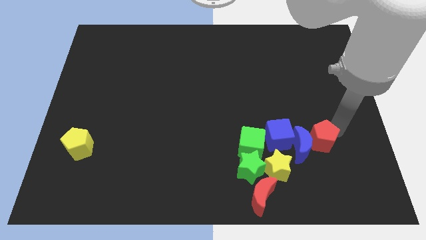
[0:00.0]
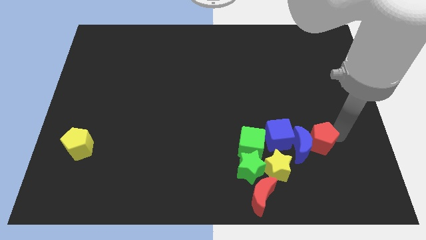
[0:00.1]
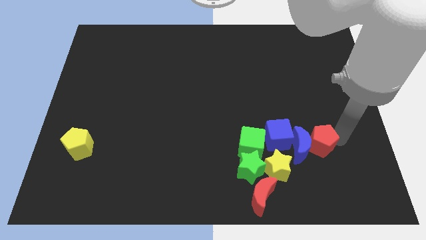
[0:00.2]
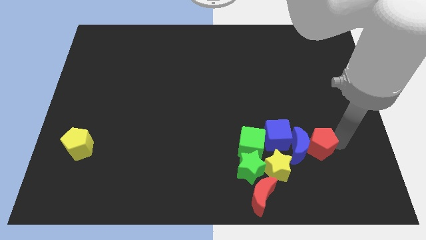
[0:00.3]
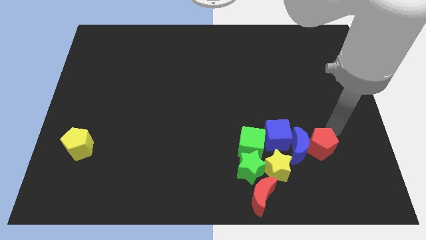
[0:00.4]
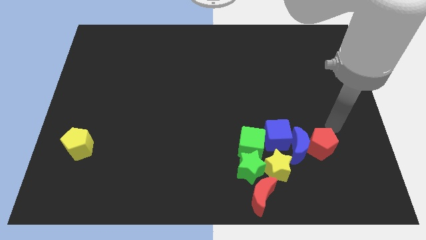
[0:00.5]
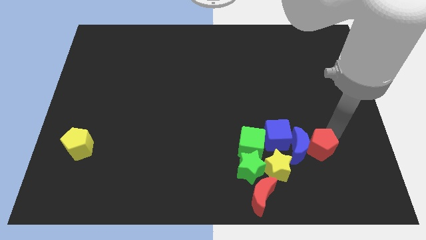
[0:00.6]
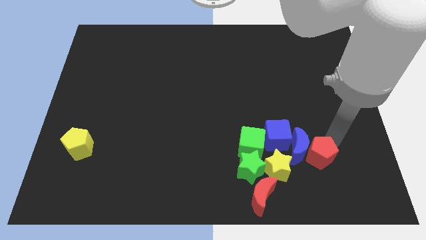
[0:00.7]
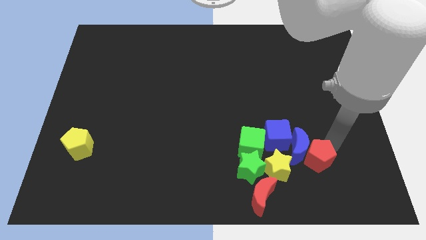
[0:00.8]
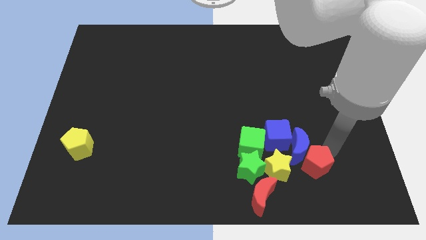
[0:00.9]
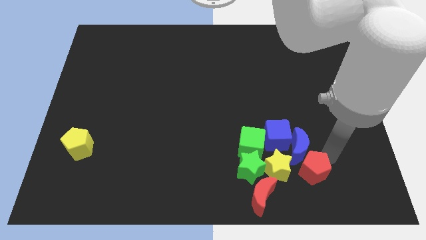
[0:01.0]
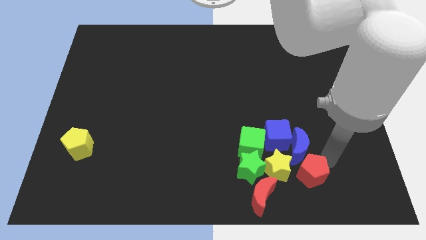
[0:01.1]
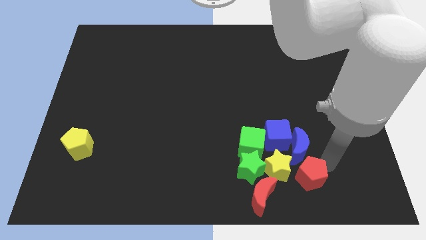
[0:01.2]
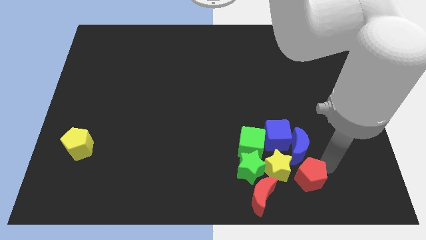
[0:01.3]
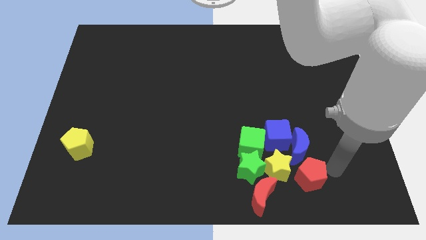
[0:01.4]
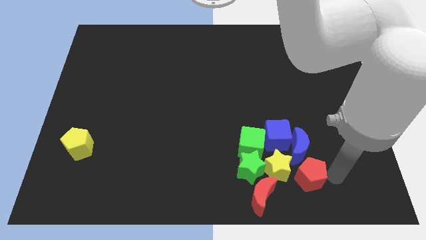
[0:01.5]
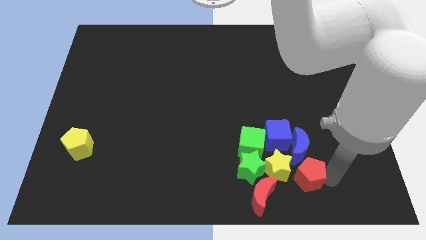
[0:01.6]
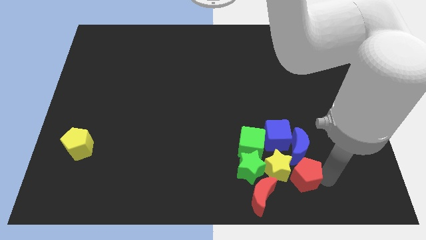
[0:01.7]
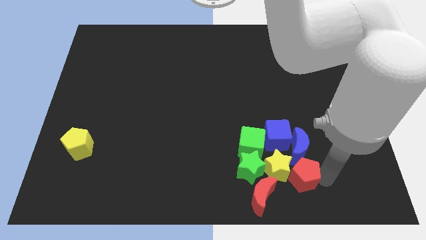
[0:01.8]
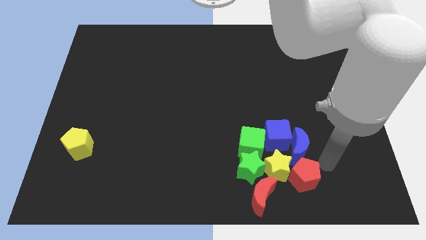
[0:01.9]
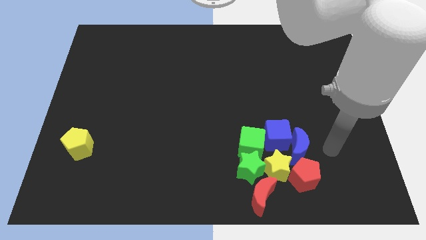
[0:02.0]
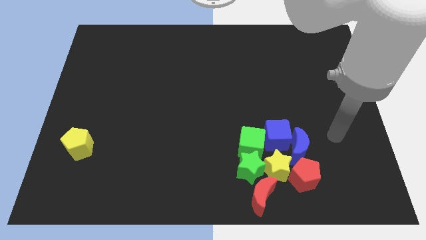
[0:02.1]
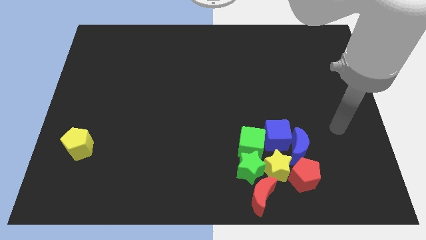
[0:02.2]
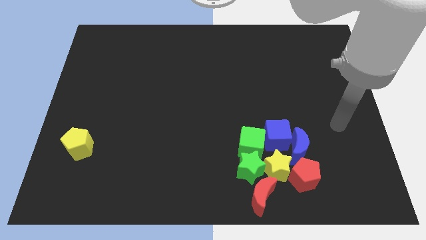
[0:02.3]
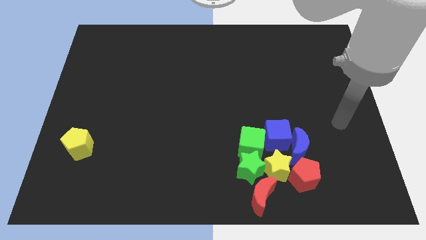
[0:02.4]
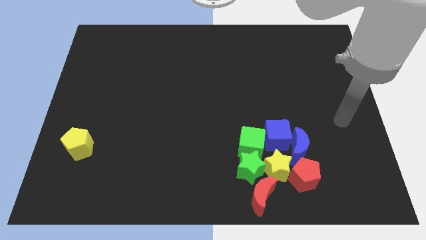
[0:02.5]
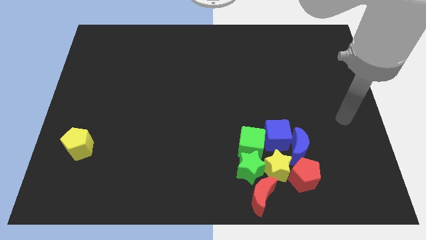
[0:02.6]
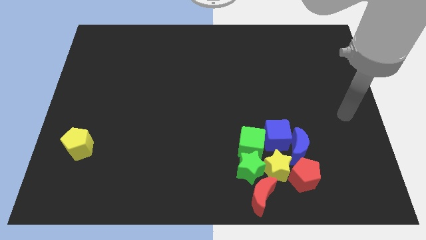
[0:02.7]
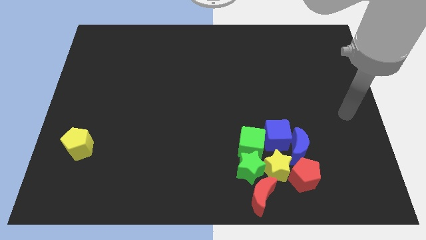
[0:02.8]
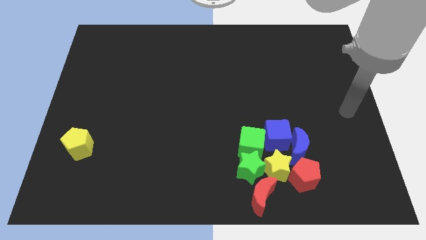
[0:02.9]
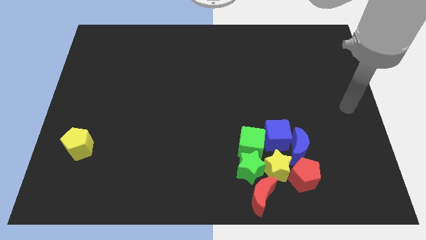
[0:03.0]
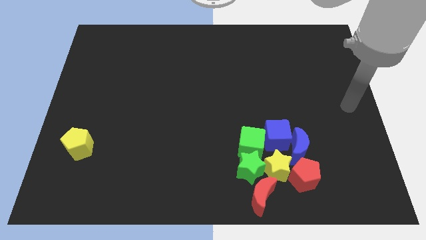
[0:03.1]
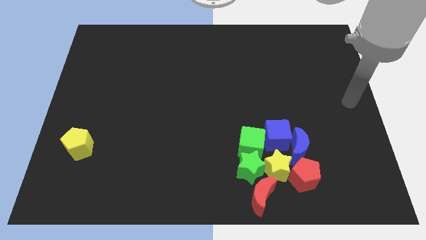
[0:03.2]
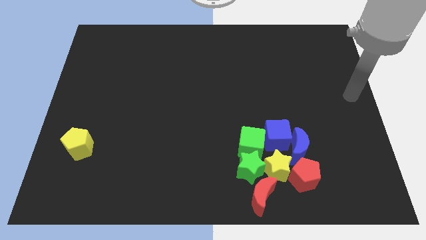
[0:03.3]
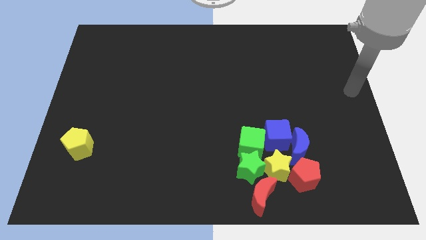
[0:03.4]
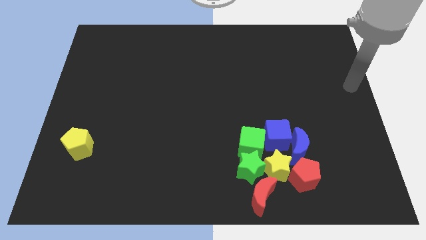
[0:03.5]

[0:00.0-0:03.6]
place red pentagon right to yellow star

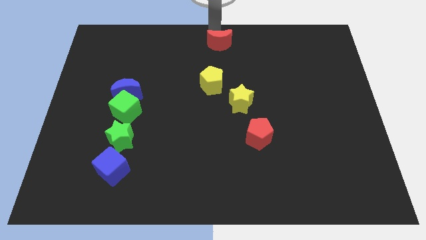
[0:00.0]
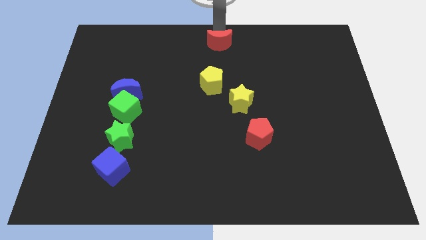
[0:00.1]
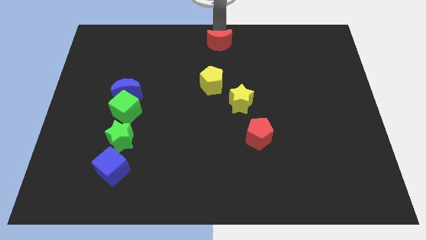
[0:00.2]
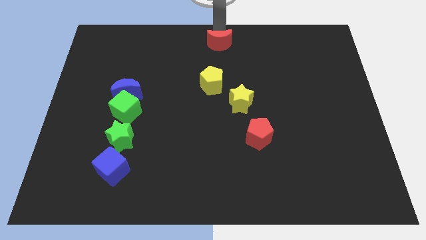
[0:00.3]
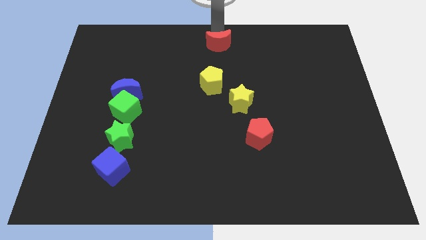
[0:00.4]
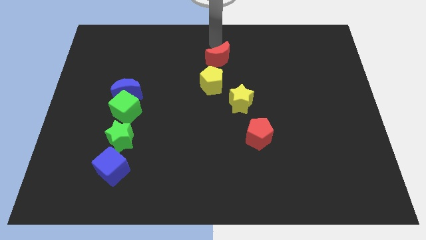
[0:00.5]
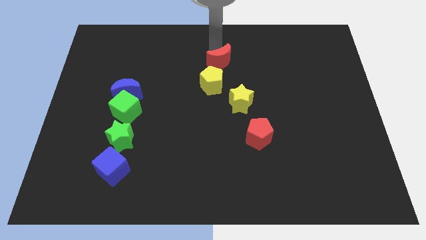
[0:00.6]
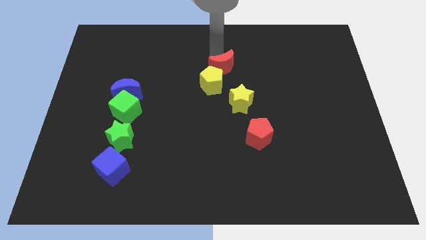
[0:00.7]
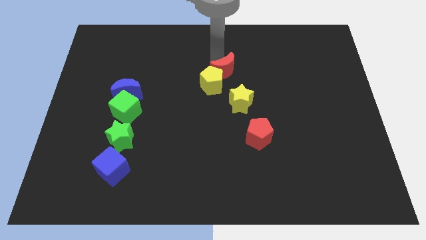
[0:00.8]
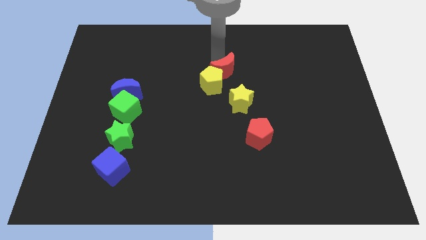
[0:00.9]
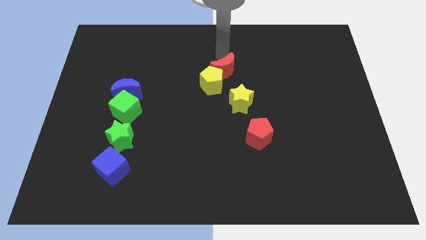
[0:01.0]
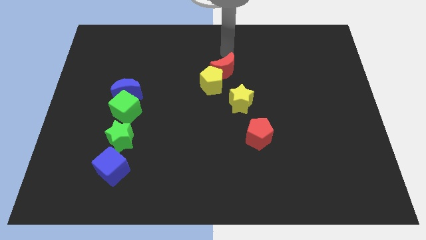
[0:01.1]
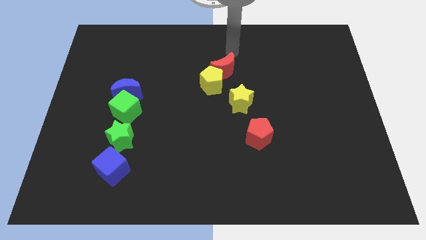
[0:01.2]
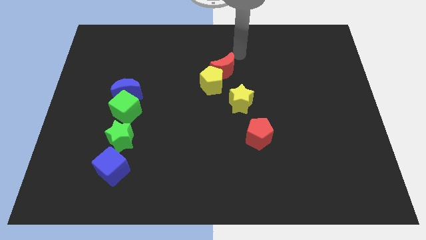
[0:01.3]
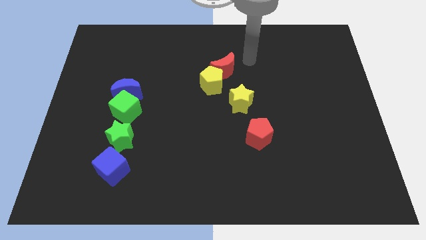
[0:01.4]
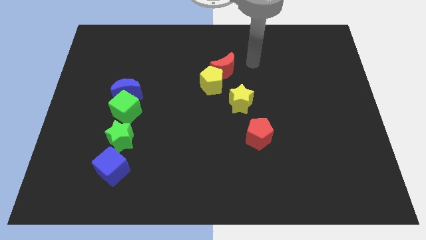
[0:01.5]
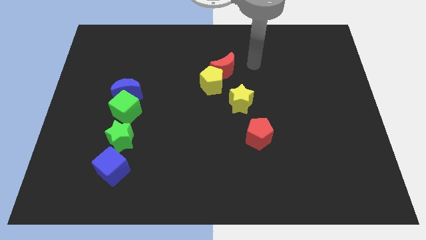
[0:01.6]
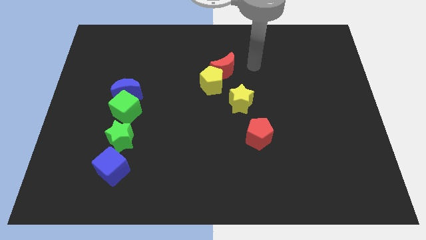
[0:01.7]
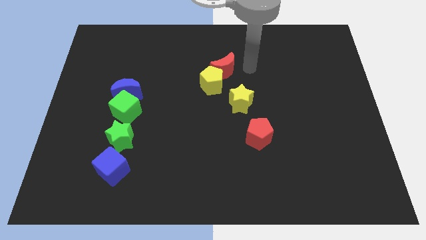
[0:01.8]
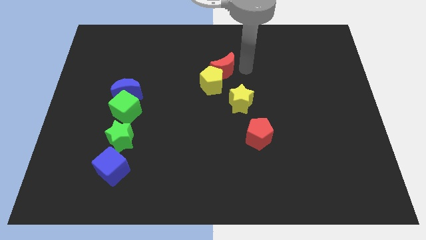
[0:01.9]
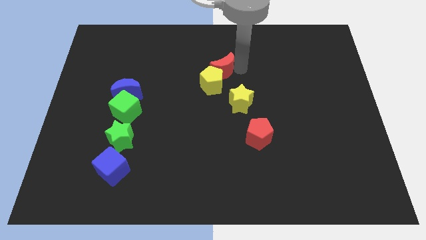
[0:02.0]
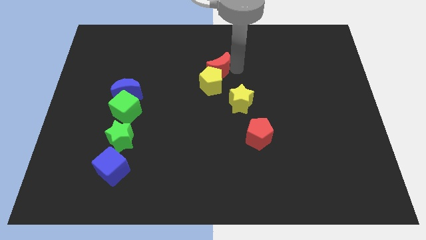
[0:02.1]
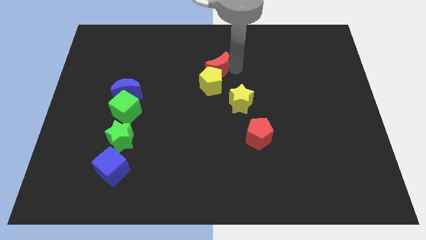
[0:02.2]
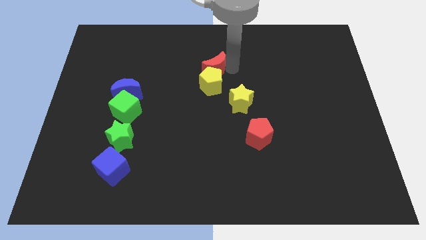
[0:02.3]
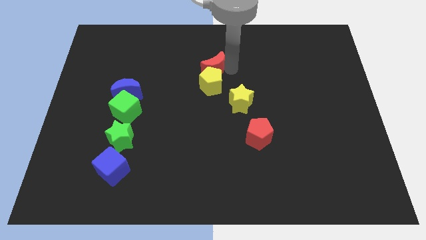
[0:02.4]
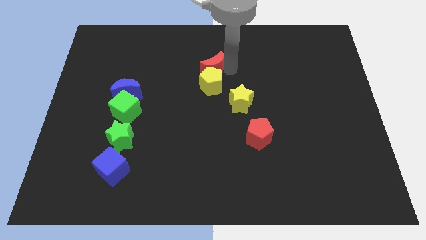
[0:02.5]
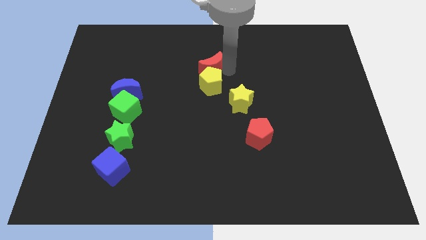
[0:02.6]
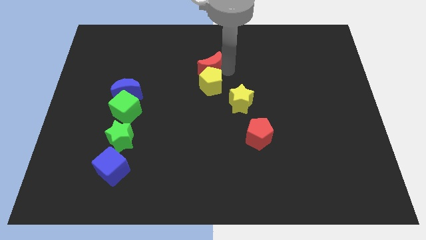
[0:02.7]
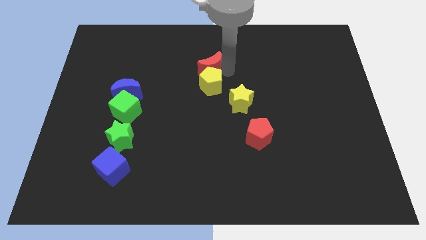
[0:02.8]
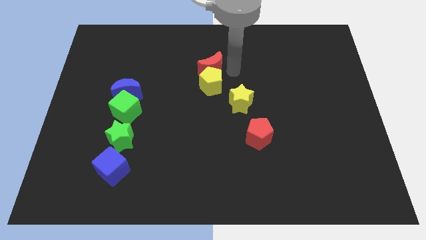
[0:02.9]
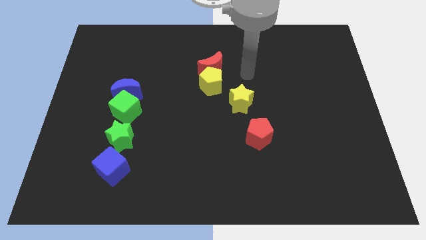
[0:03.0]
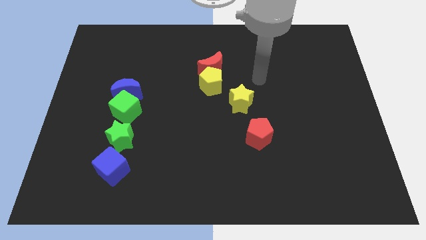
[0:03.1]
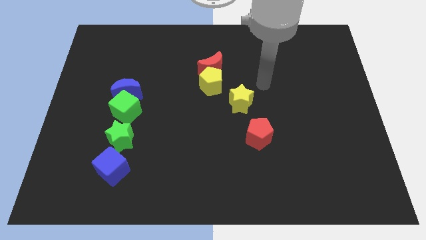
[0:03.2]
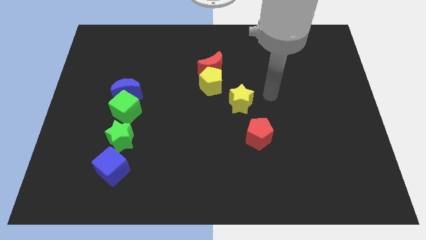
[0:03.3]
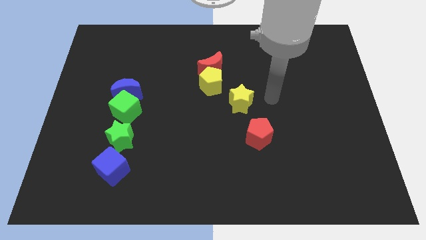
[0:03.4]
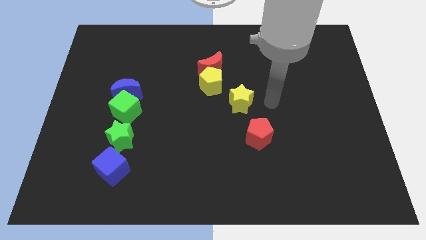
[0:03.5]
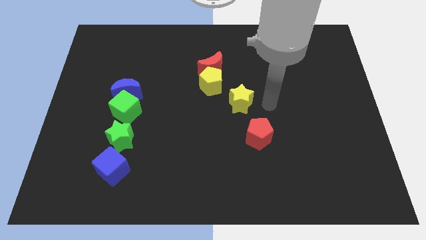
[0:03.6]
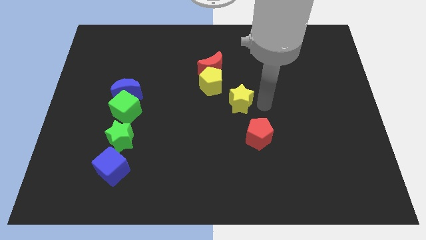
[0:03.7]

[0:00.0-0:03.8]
move the red crescent into the yellow pentagon

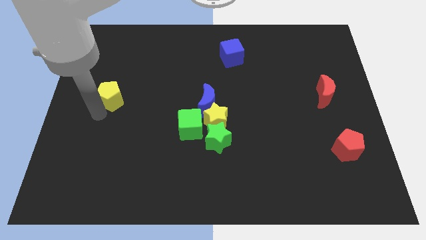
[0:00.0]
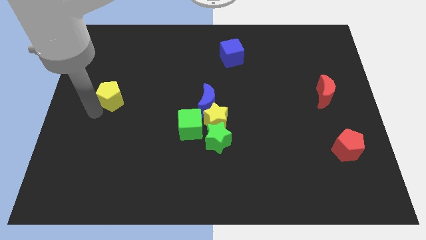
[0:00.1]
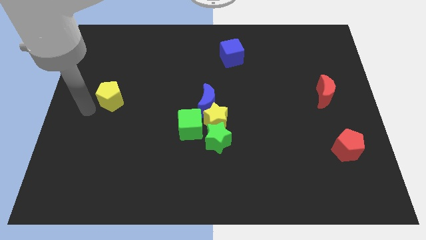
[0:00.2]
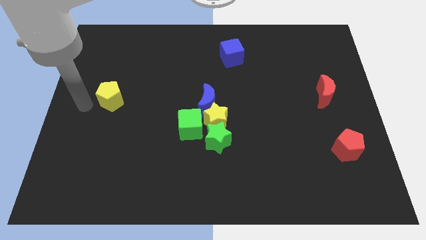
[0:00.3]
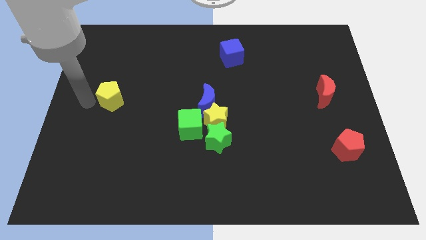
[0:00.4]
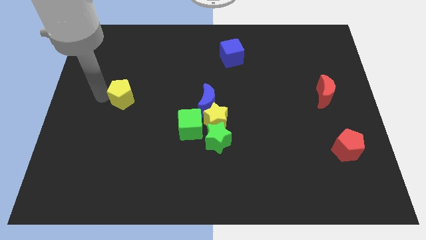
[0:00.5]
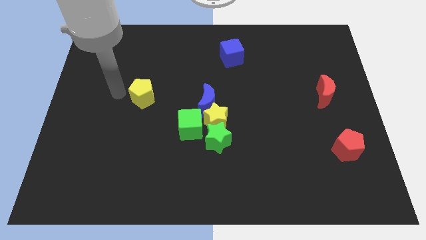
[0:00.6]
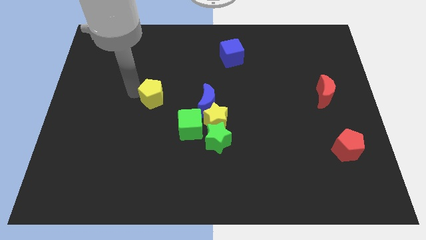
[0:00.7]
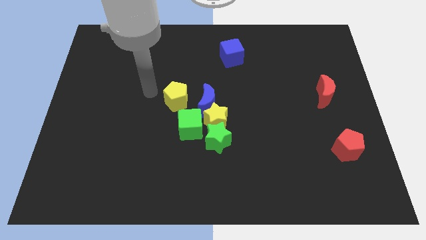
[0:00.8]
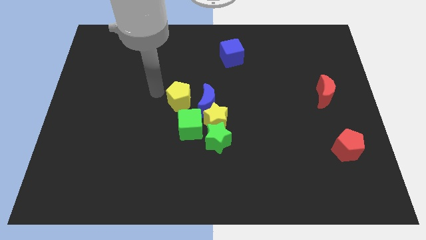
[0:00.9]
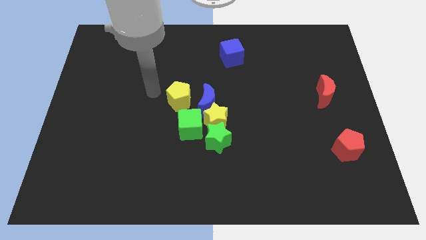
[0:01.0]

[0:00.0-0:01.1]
place the yellow pentagon to the left of the blue crescent

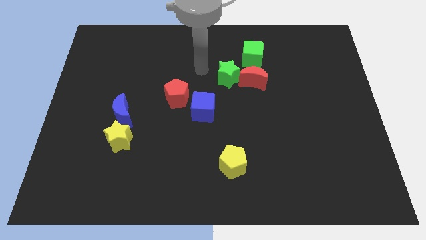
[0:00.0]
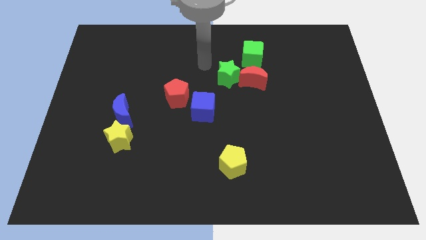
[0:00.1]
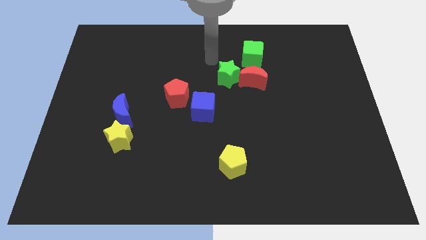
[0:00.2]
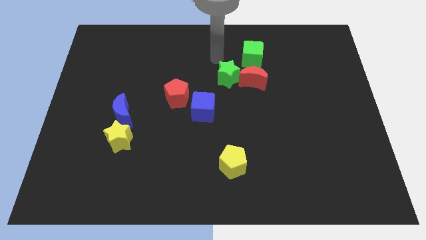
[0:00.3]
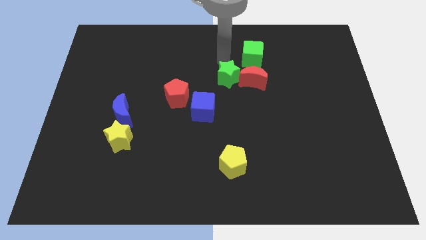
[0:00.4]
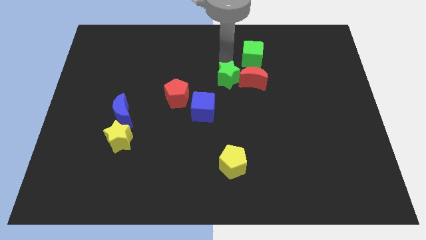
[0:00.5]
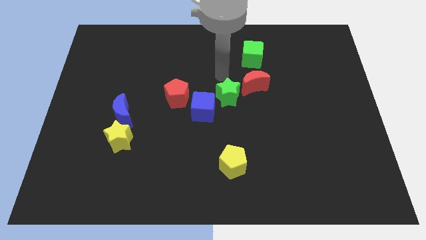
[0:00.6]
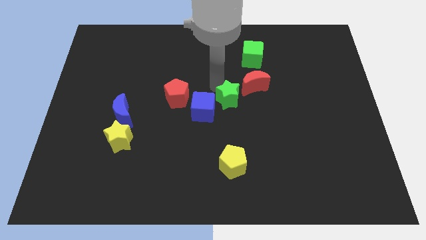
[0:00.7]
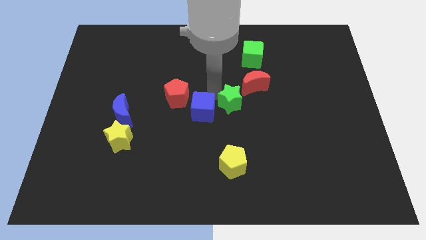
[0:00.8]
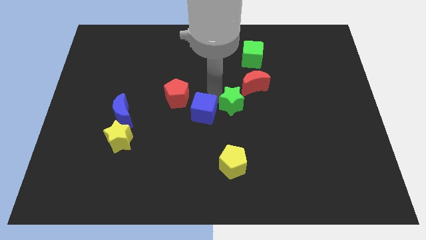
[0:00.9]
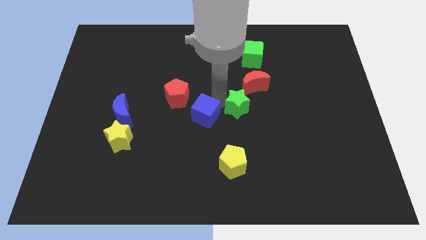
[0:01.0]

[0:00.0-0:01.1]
place the green star in between the blue cube and red moon
